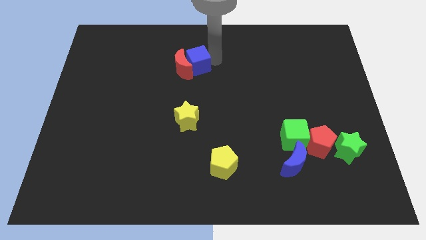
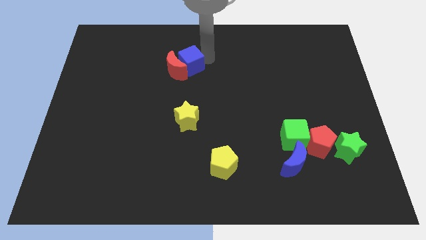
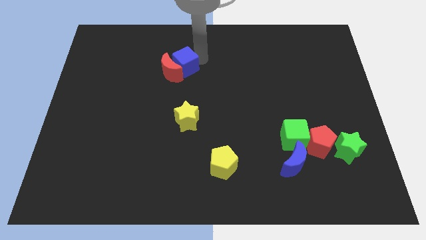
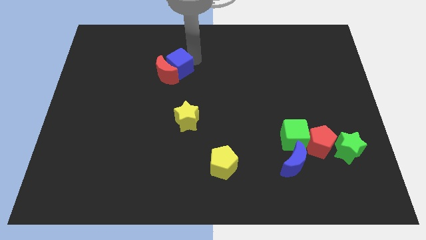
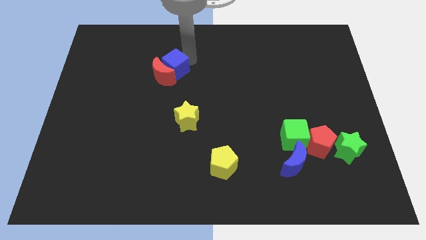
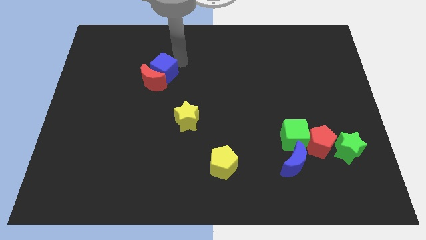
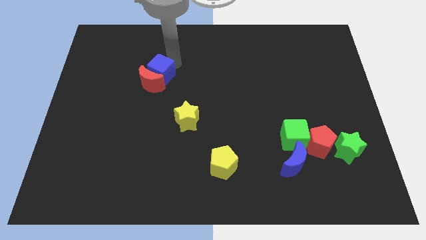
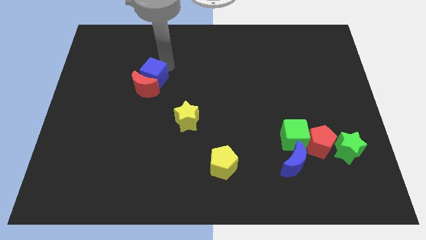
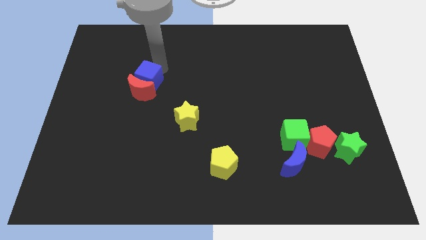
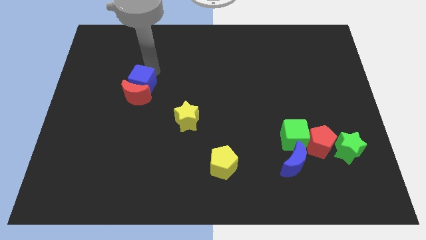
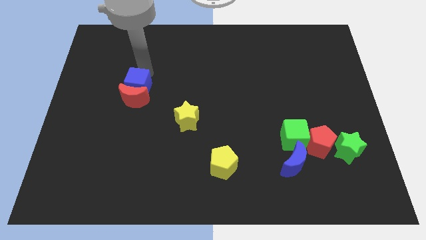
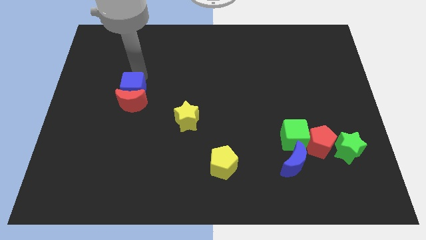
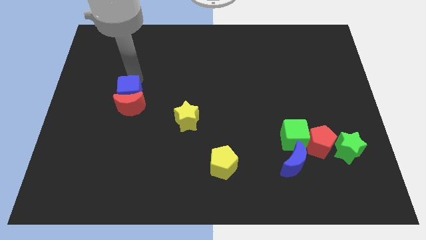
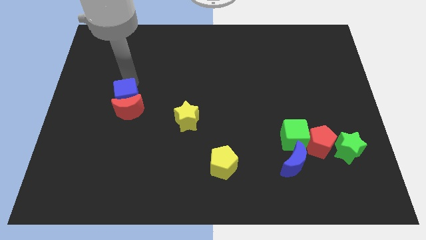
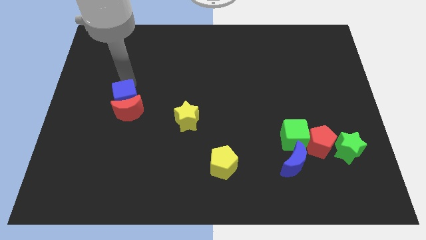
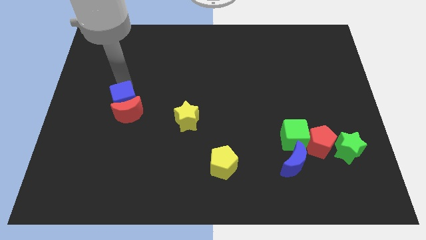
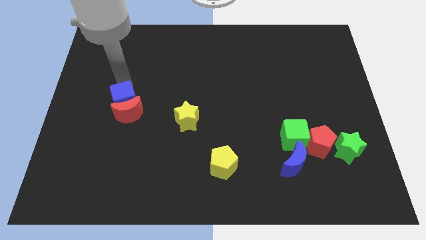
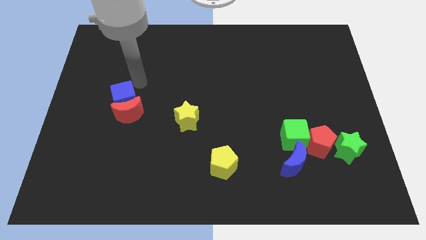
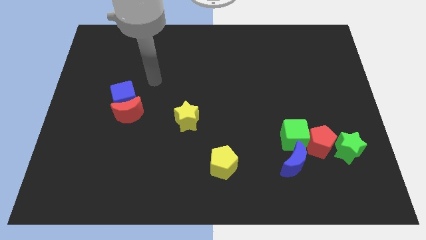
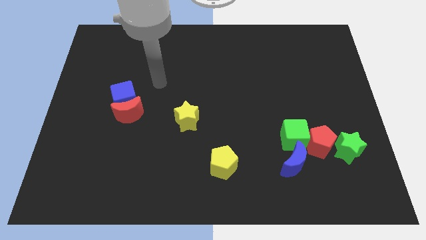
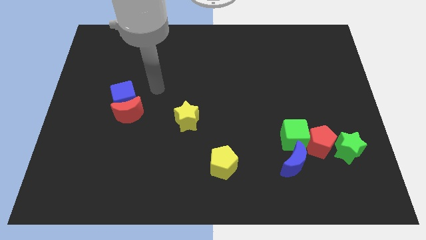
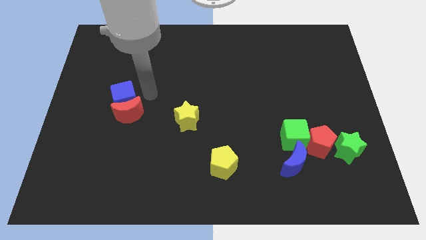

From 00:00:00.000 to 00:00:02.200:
push the blue cube and the red crescent slightly towards down

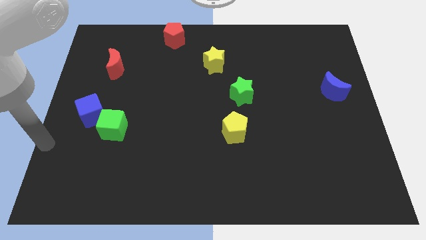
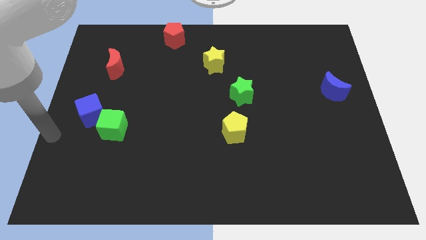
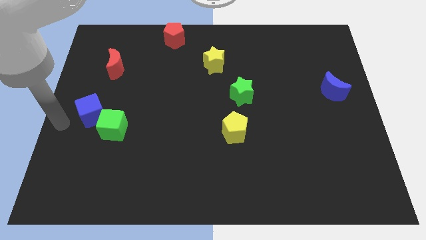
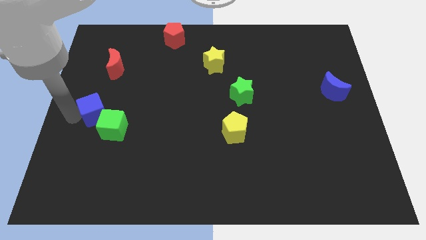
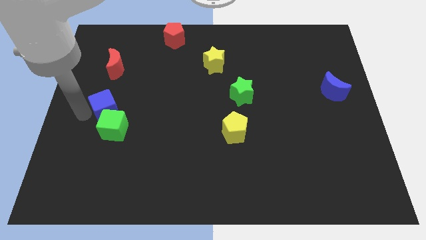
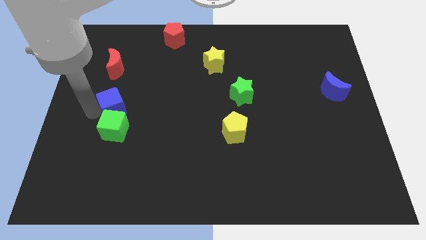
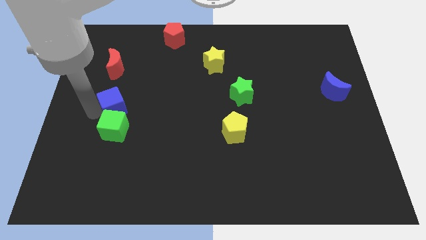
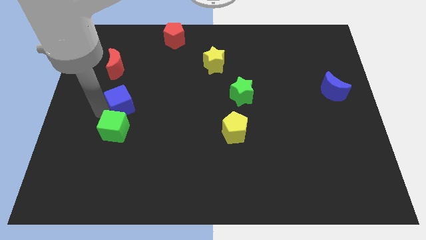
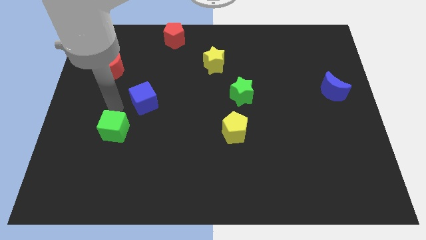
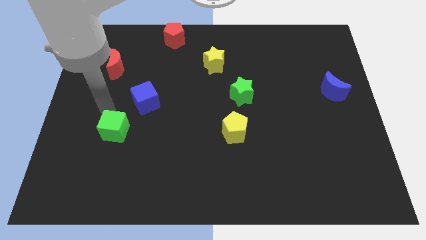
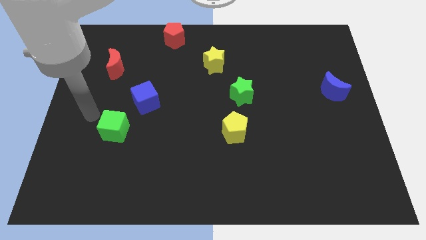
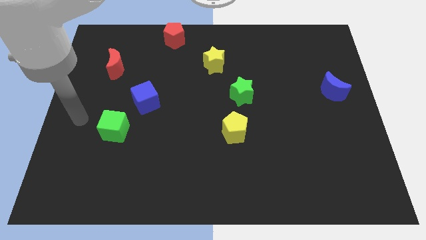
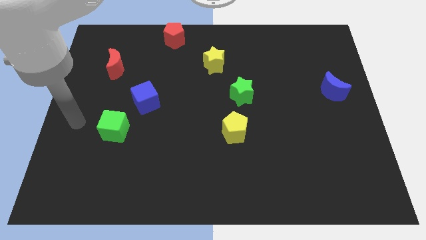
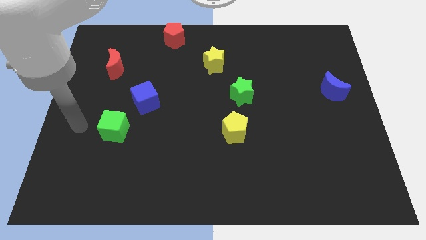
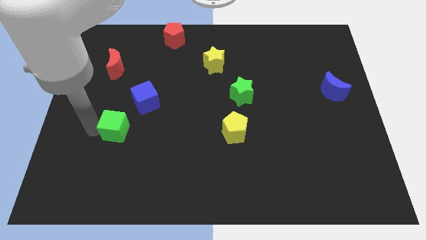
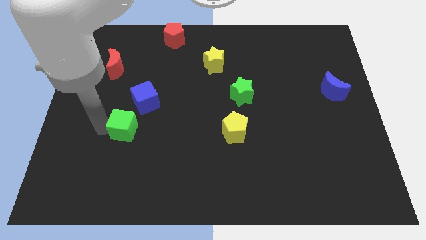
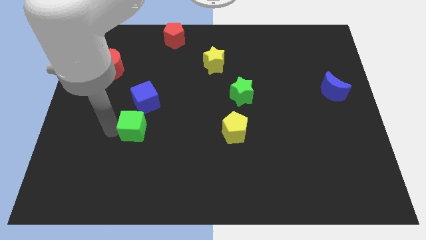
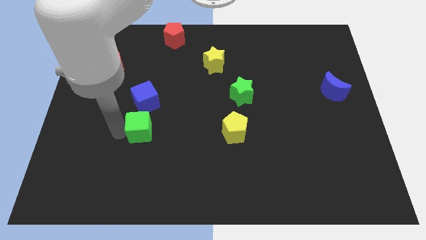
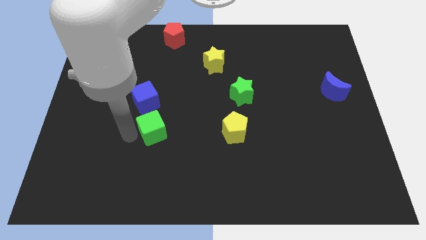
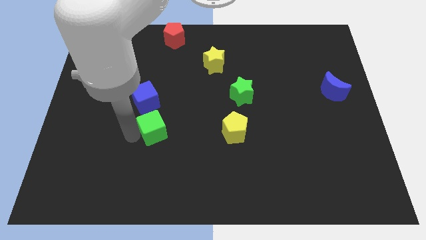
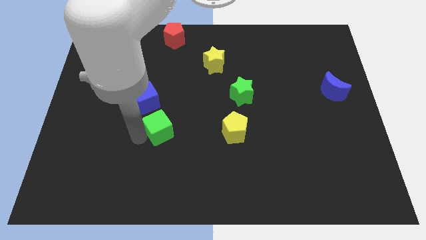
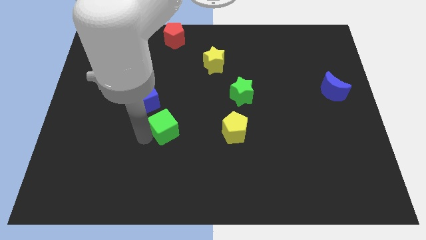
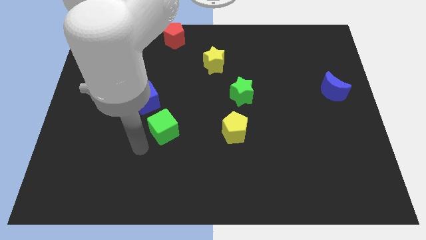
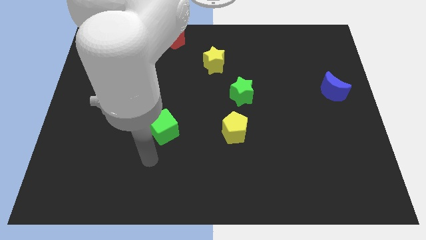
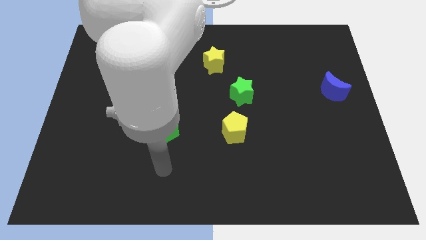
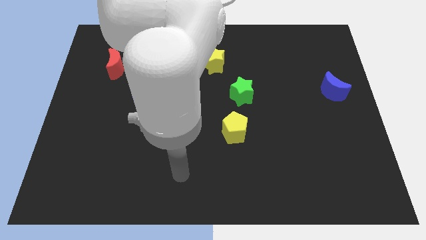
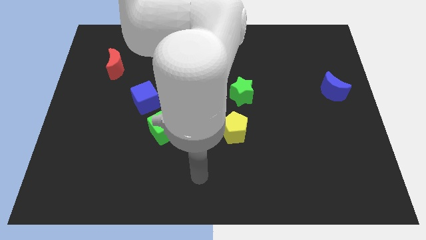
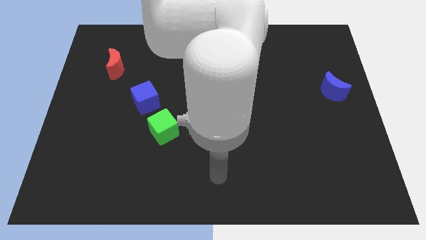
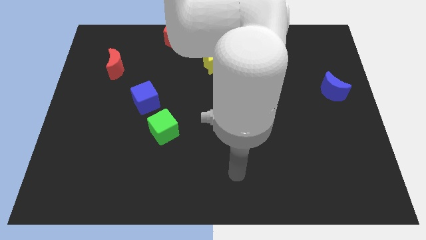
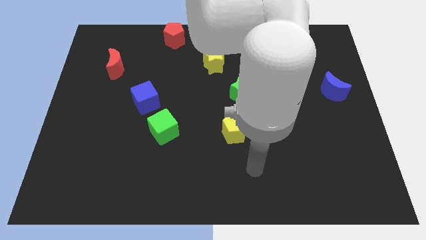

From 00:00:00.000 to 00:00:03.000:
push the green cube underneath the blue block

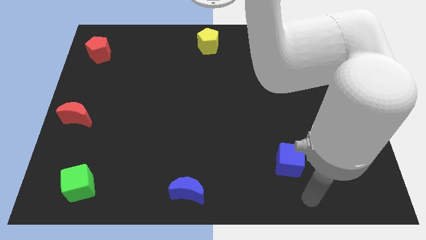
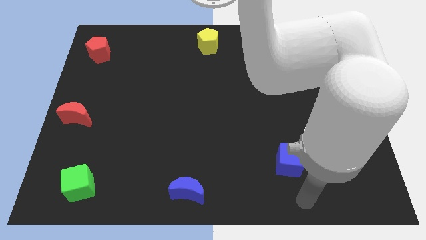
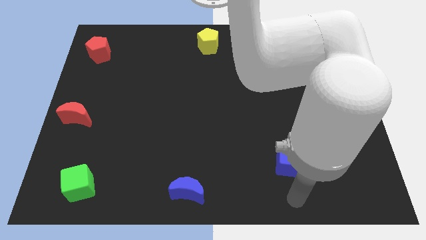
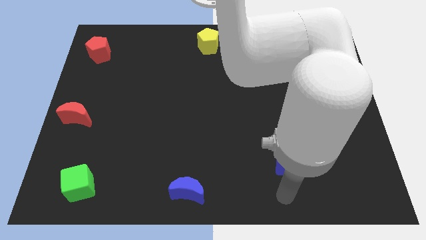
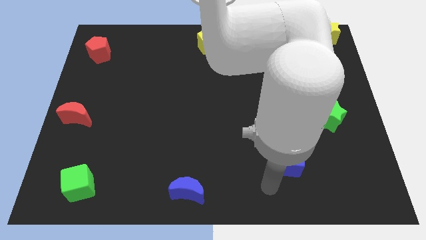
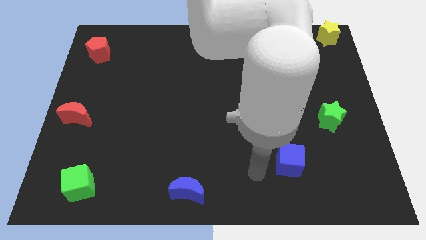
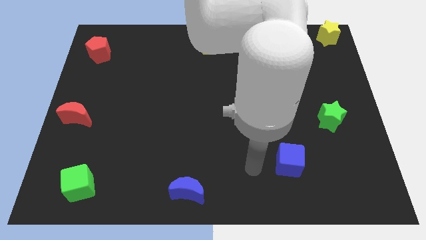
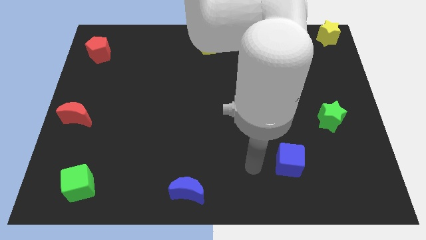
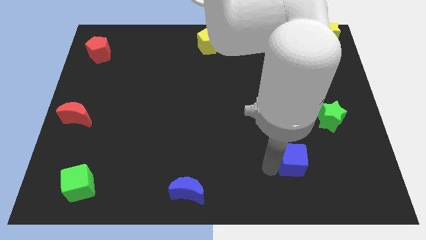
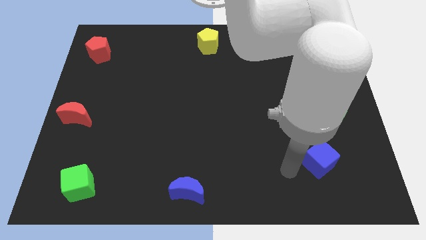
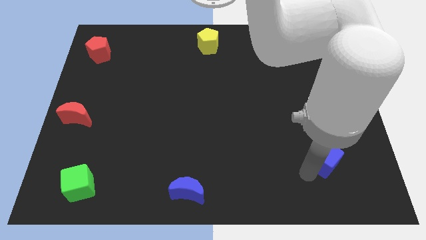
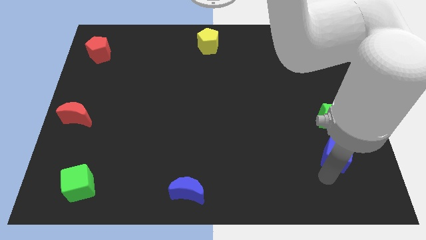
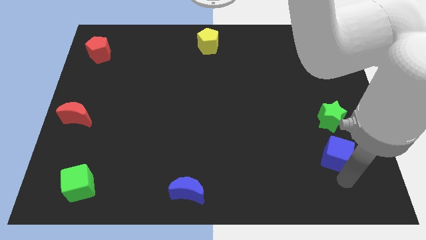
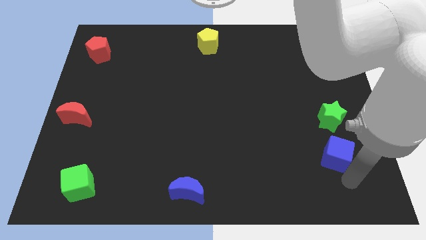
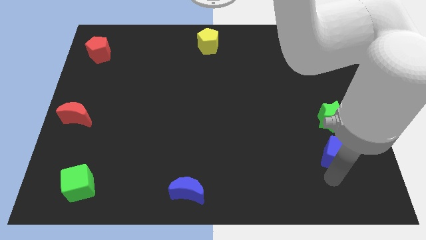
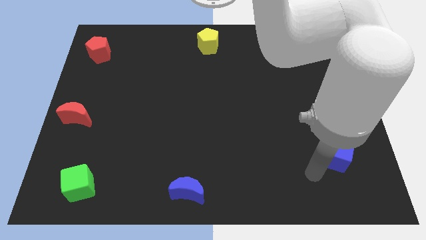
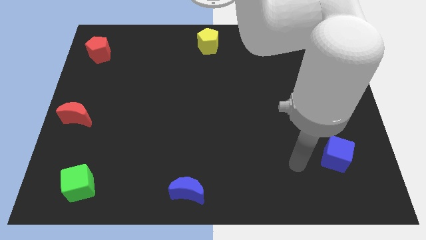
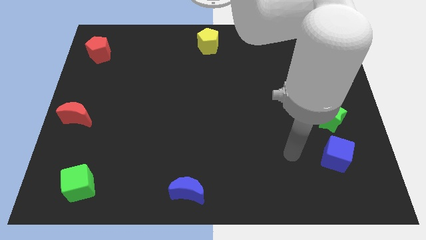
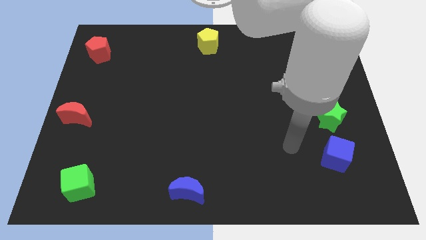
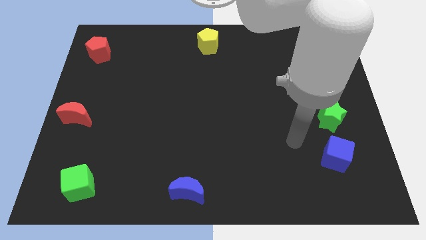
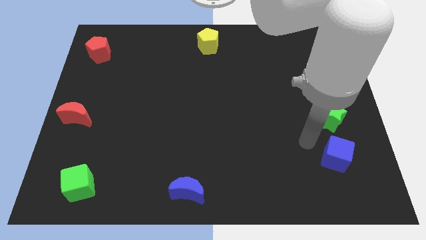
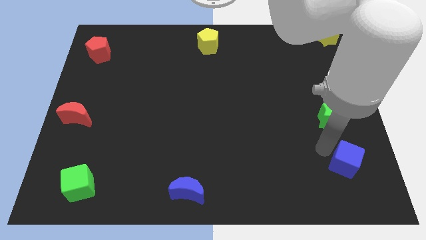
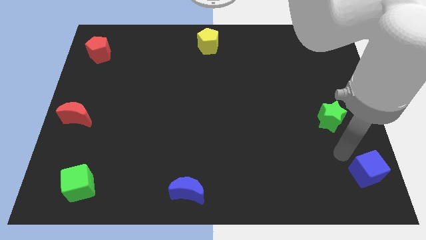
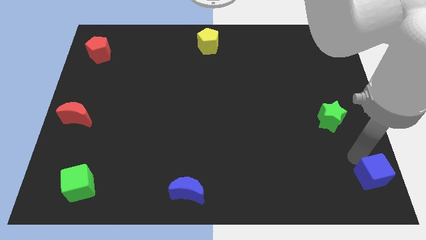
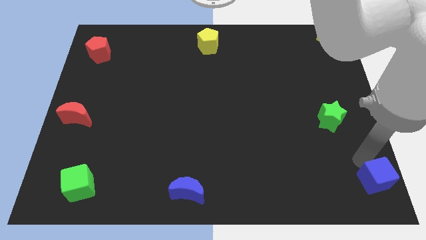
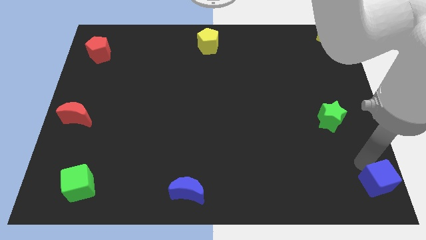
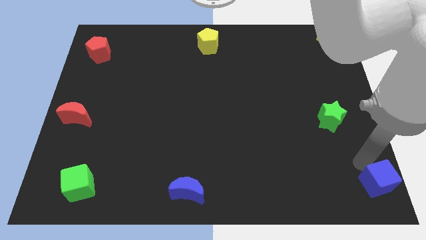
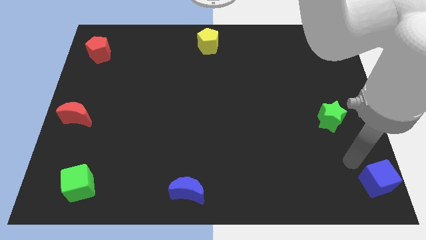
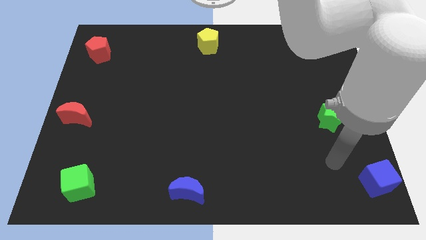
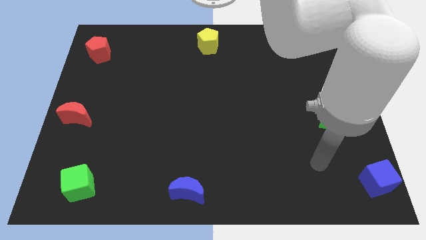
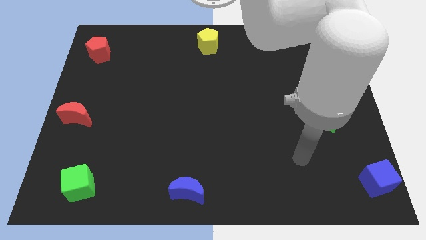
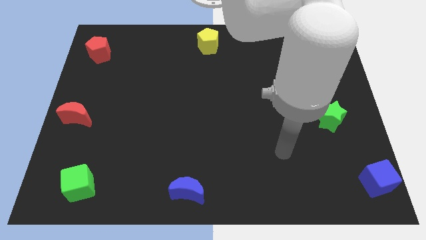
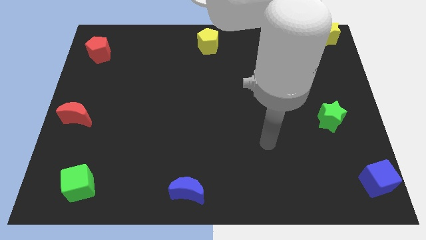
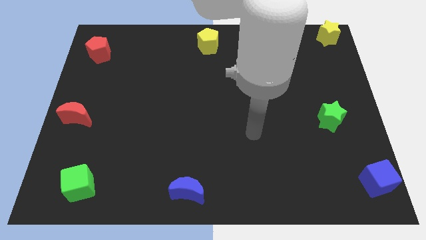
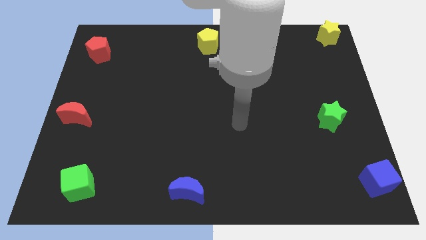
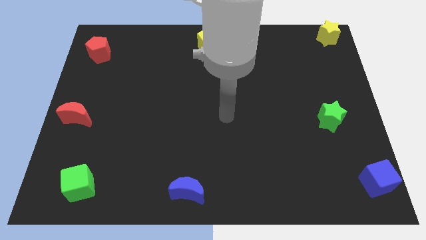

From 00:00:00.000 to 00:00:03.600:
drag the blue cube to the bottom right

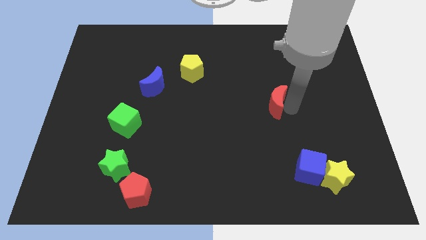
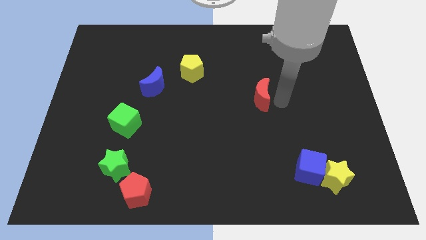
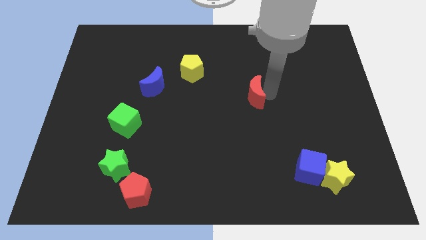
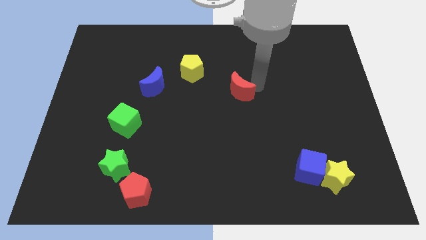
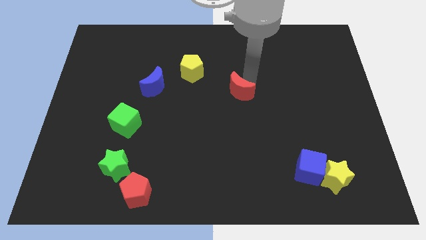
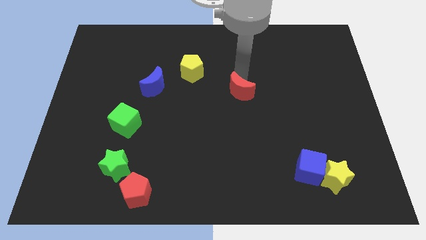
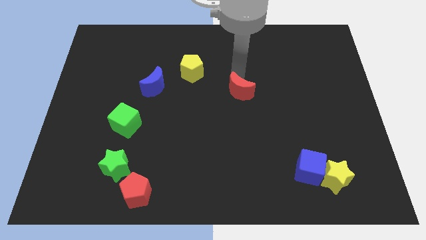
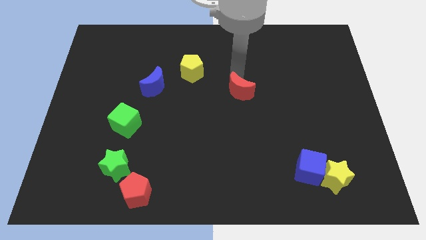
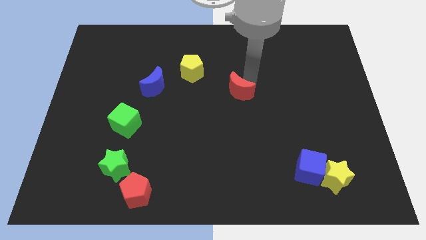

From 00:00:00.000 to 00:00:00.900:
drag the red moon slightly upwards
